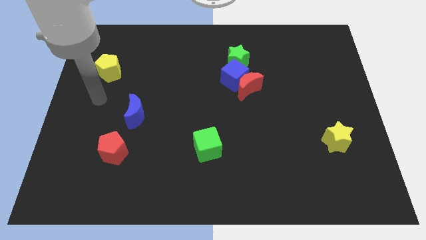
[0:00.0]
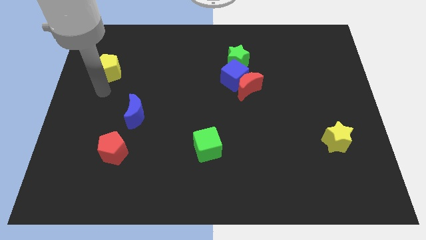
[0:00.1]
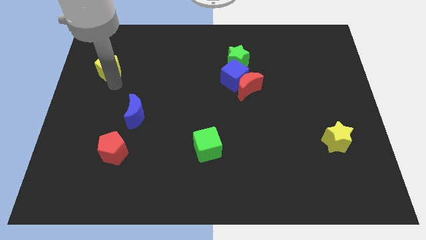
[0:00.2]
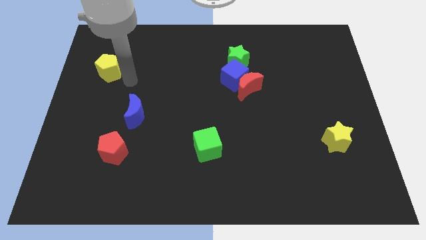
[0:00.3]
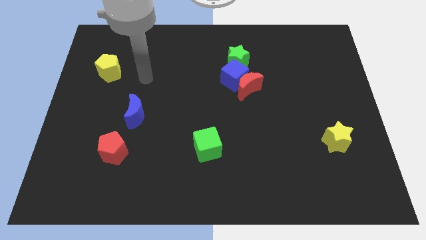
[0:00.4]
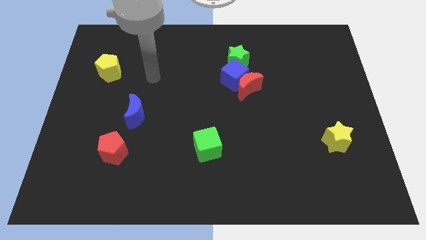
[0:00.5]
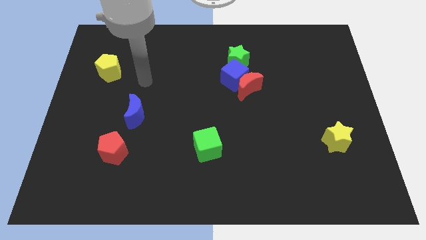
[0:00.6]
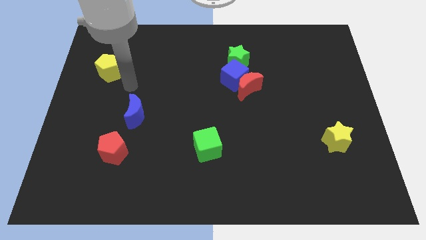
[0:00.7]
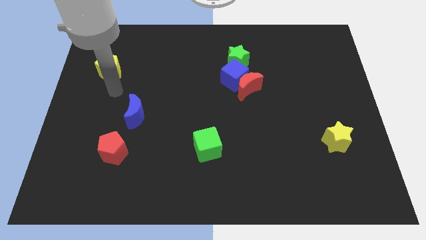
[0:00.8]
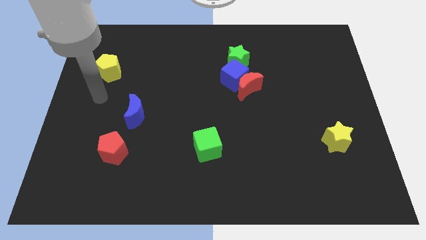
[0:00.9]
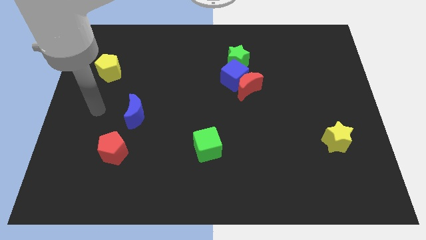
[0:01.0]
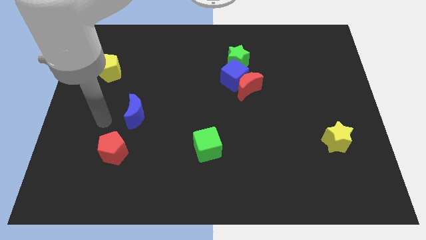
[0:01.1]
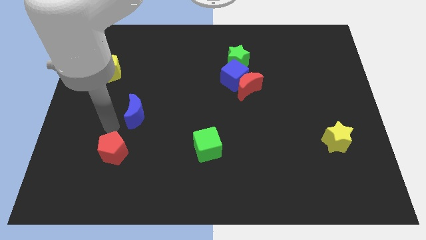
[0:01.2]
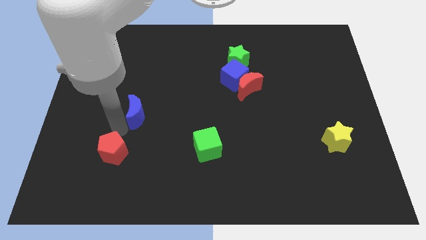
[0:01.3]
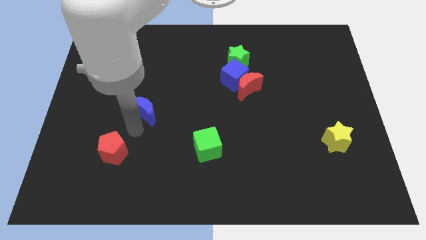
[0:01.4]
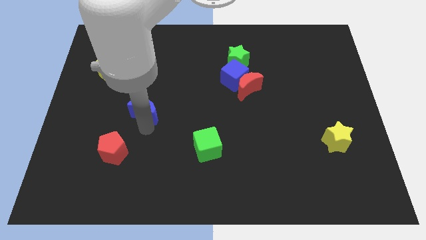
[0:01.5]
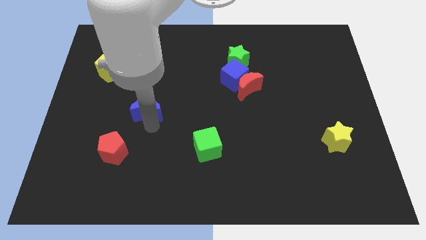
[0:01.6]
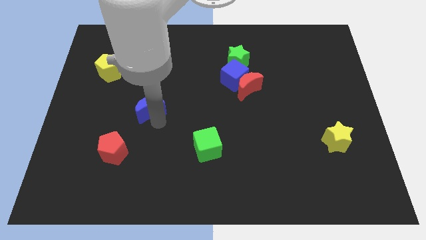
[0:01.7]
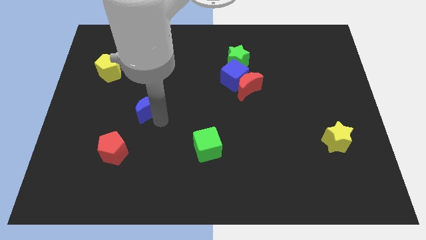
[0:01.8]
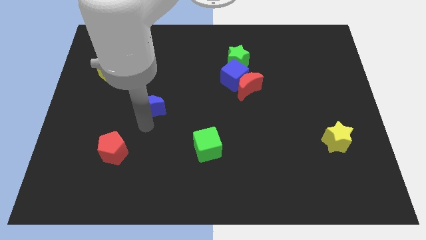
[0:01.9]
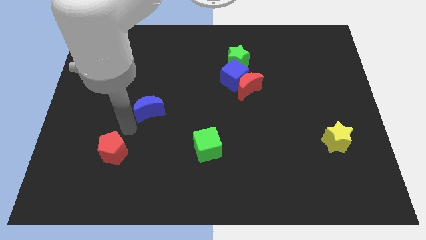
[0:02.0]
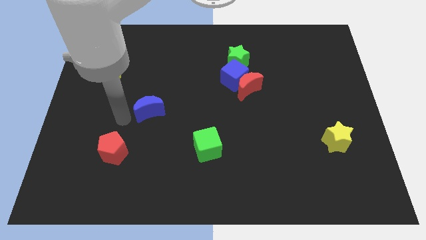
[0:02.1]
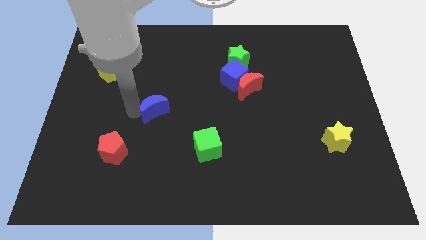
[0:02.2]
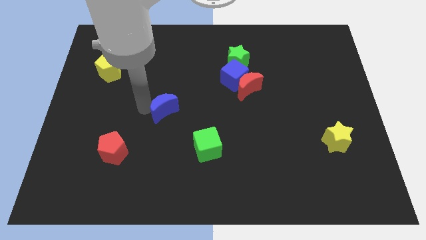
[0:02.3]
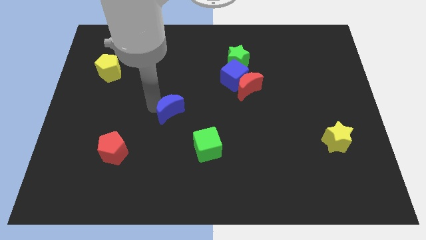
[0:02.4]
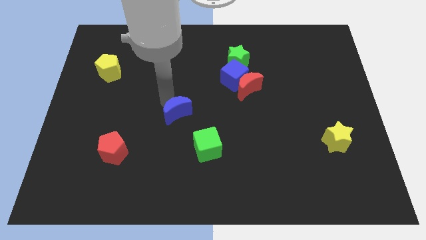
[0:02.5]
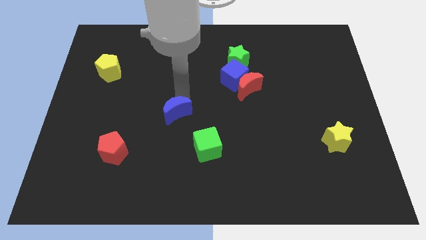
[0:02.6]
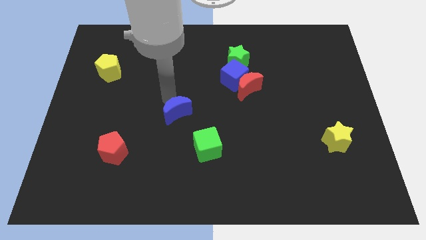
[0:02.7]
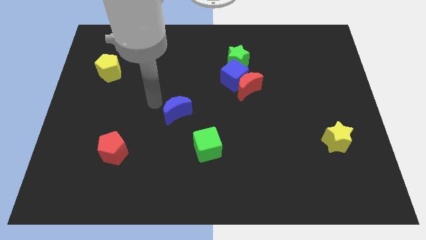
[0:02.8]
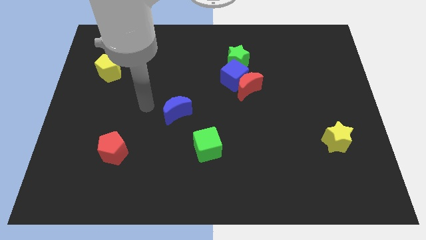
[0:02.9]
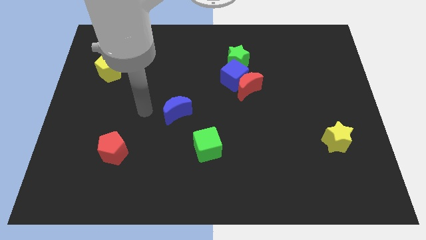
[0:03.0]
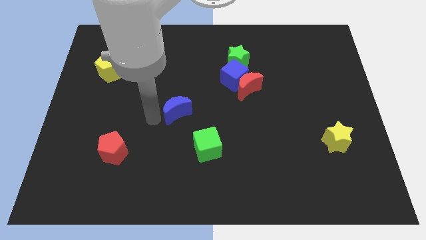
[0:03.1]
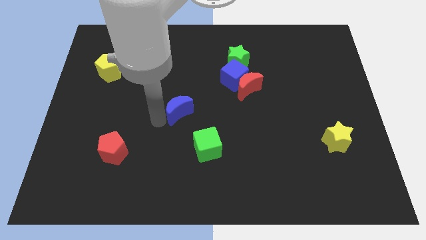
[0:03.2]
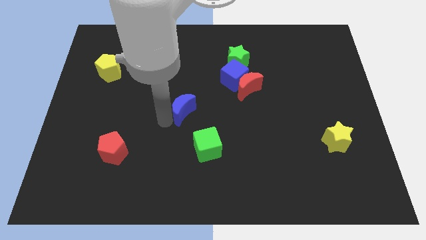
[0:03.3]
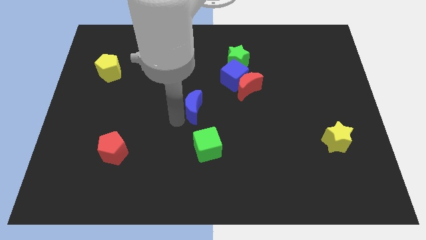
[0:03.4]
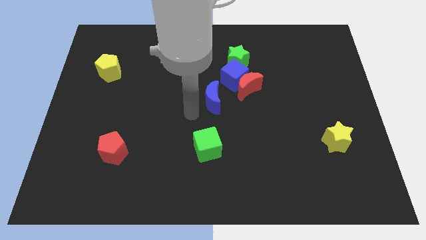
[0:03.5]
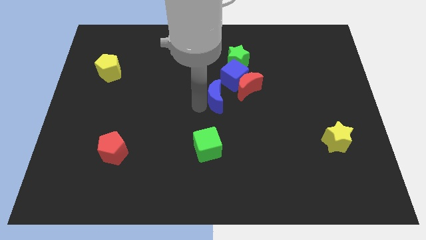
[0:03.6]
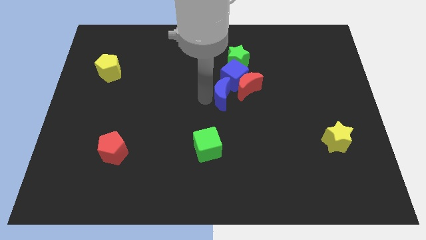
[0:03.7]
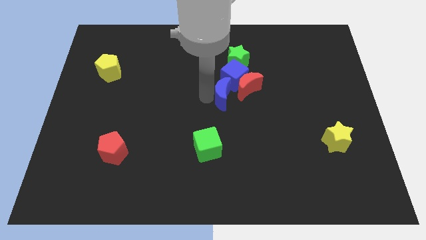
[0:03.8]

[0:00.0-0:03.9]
push the blue crescent towards the center of the board

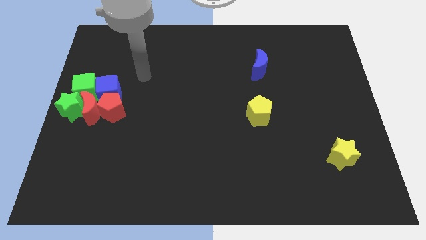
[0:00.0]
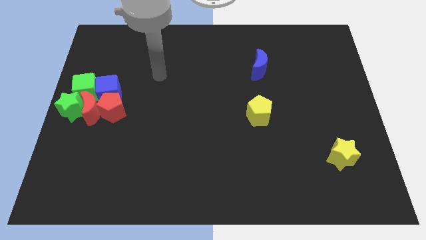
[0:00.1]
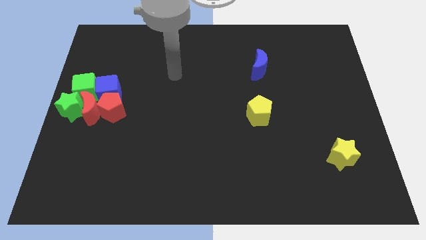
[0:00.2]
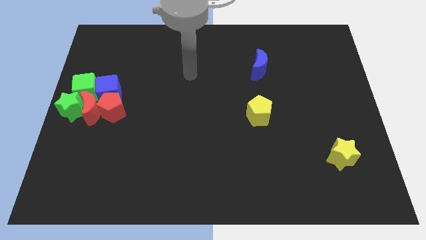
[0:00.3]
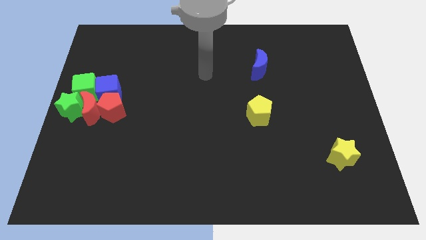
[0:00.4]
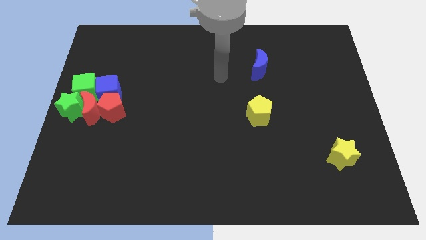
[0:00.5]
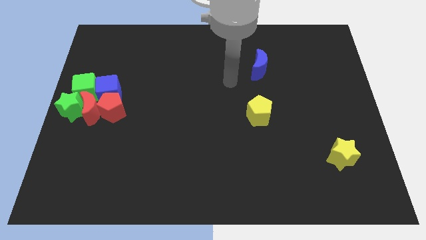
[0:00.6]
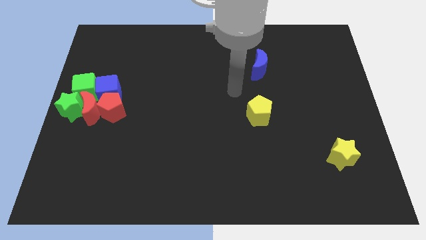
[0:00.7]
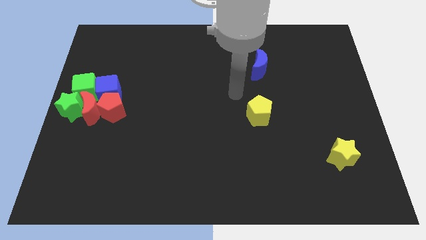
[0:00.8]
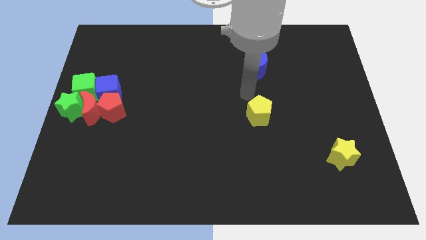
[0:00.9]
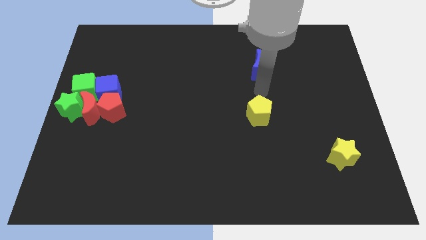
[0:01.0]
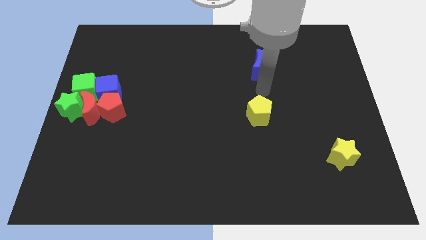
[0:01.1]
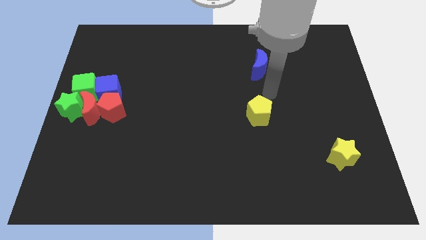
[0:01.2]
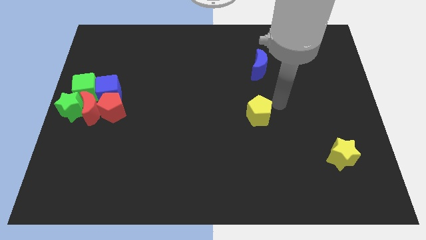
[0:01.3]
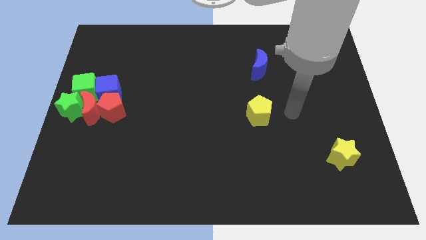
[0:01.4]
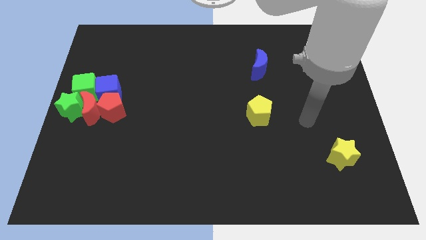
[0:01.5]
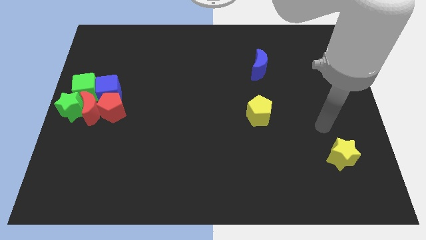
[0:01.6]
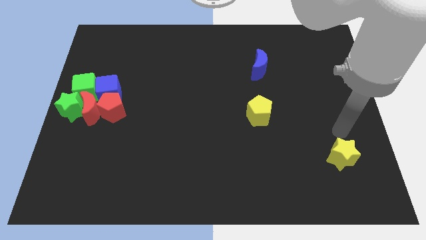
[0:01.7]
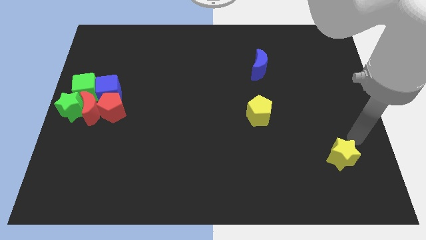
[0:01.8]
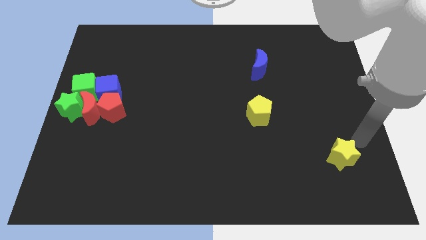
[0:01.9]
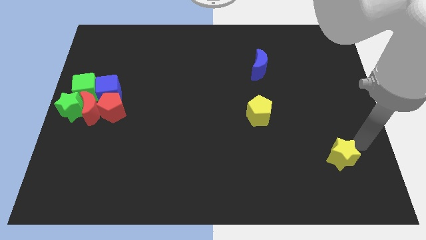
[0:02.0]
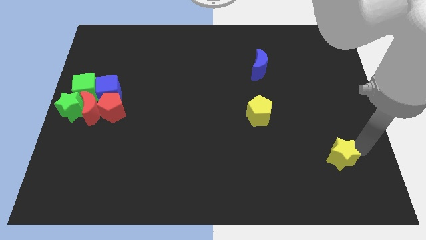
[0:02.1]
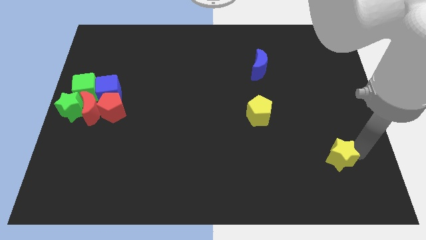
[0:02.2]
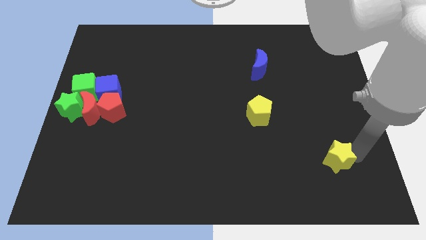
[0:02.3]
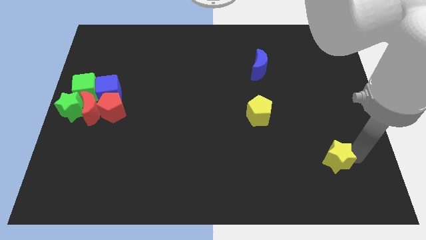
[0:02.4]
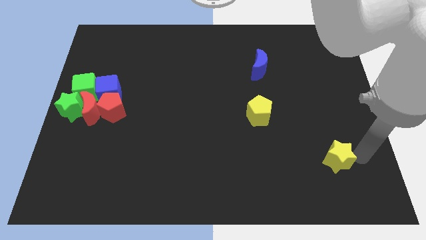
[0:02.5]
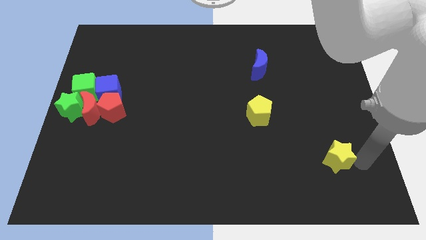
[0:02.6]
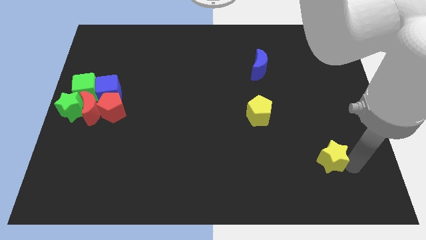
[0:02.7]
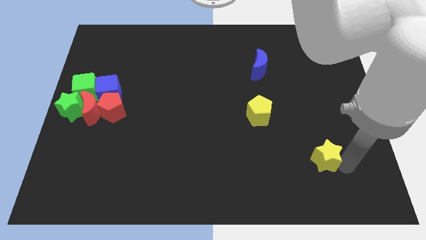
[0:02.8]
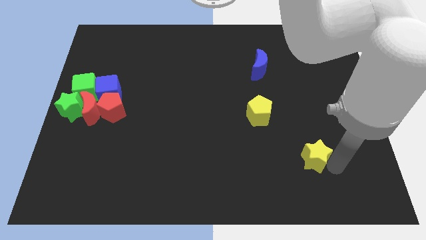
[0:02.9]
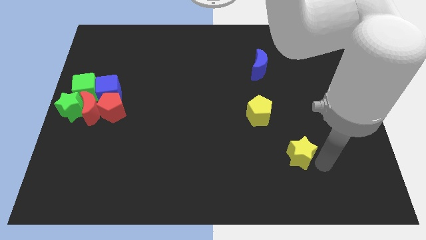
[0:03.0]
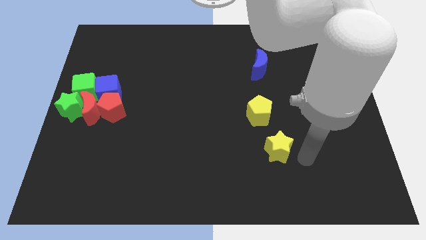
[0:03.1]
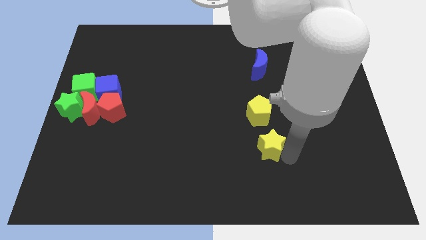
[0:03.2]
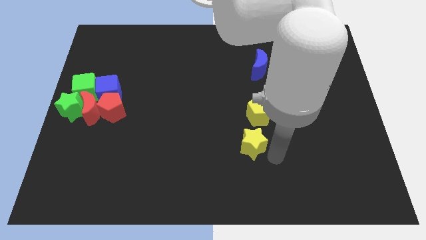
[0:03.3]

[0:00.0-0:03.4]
push the yellow star to the bottom of the yellow pentagon

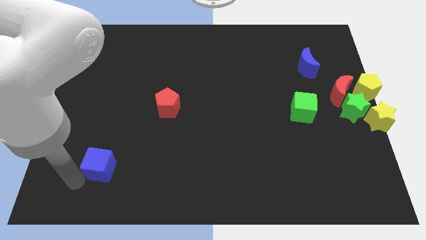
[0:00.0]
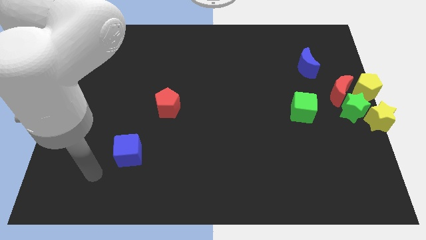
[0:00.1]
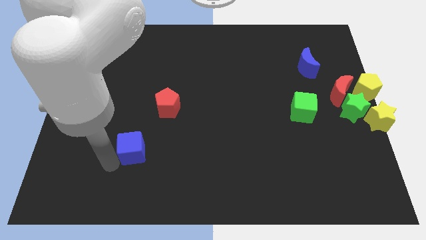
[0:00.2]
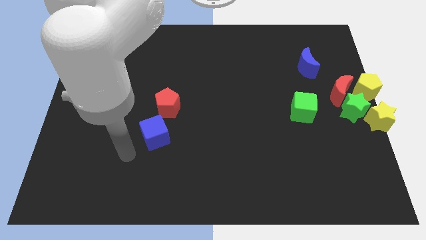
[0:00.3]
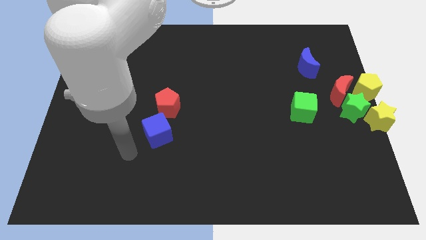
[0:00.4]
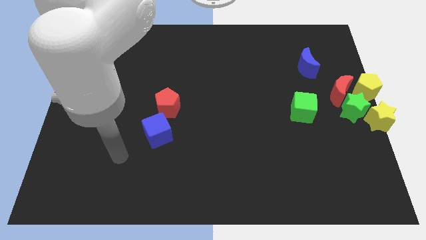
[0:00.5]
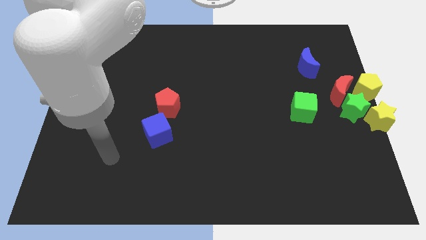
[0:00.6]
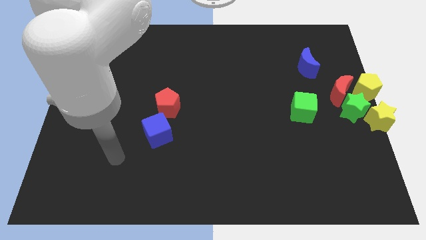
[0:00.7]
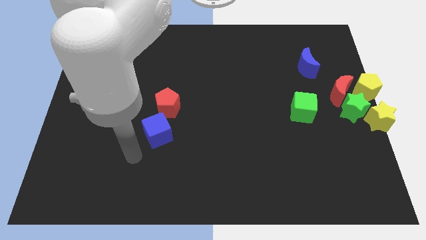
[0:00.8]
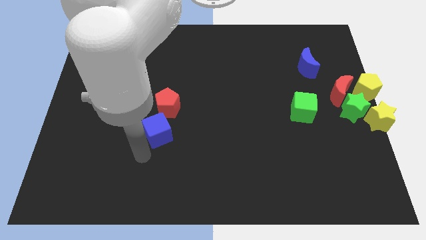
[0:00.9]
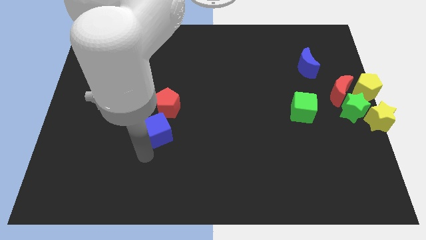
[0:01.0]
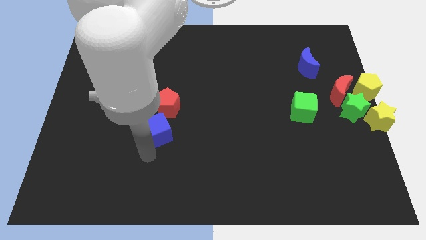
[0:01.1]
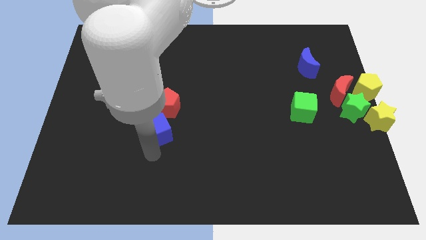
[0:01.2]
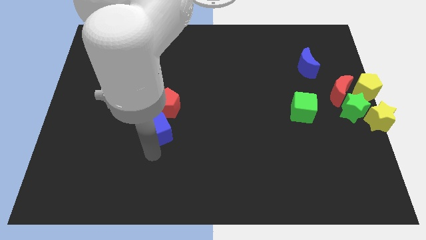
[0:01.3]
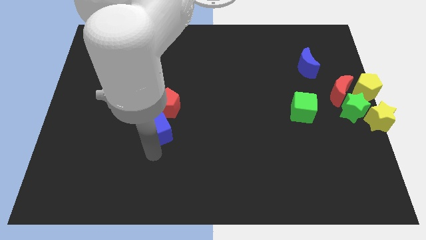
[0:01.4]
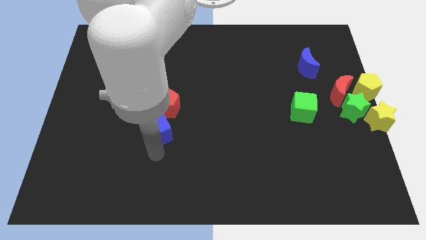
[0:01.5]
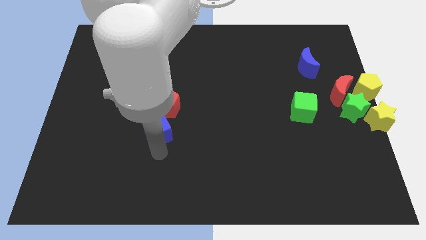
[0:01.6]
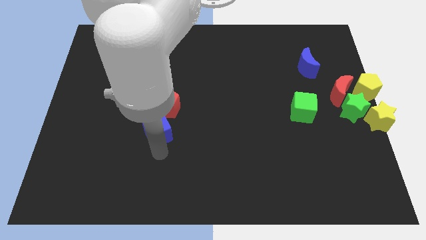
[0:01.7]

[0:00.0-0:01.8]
move the blue cube vertically below the red pentagon
